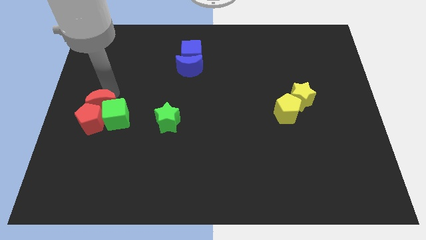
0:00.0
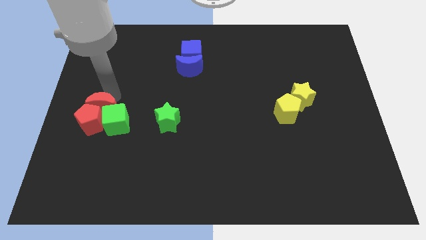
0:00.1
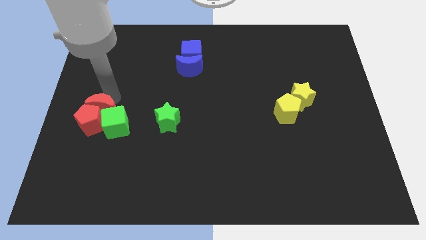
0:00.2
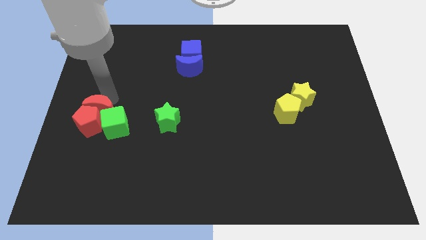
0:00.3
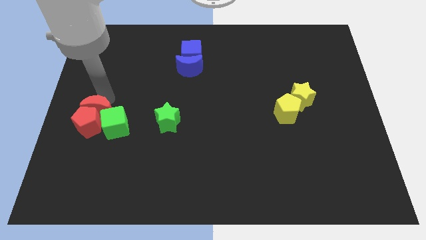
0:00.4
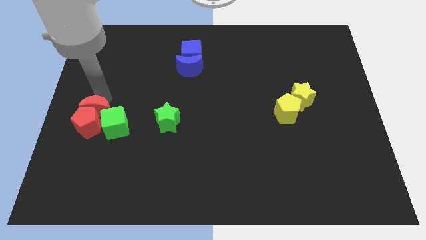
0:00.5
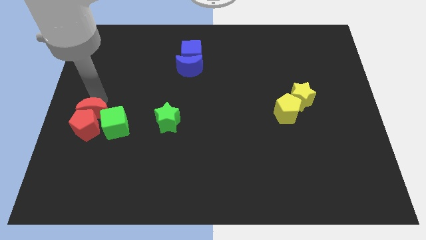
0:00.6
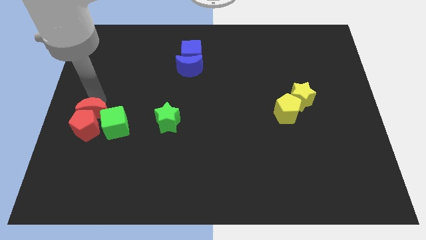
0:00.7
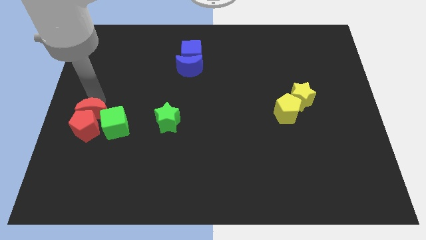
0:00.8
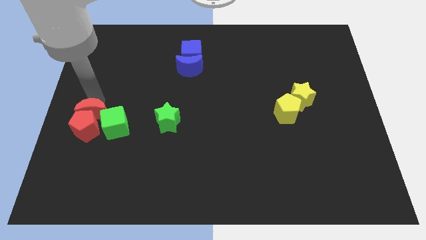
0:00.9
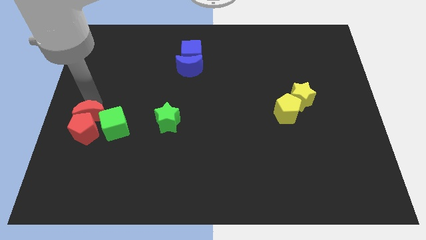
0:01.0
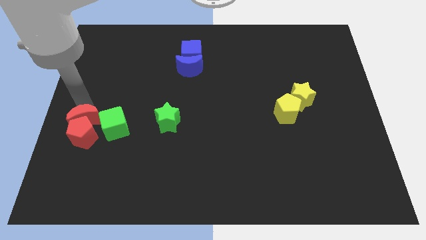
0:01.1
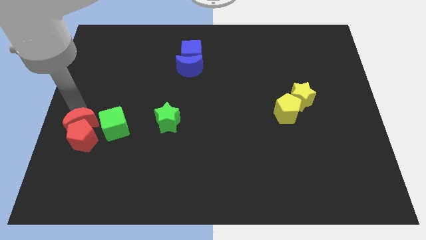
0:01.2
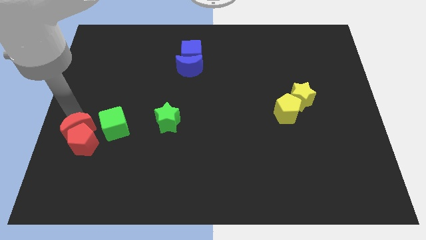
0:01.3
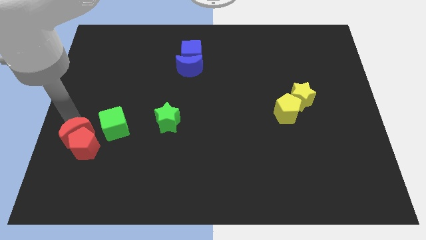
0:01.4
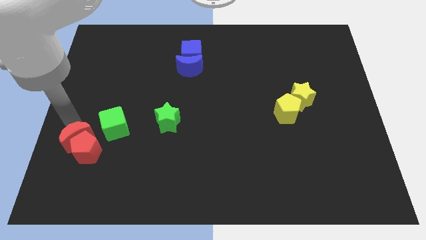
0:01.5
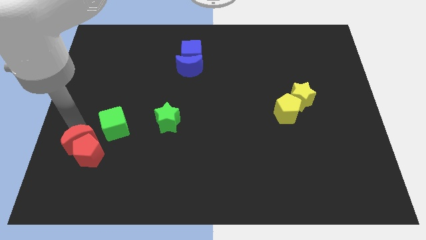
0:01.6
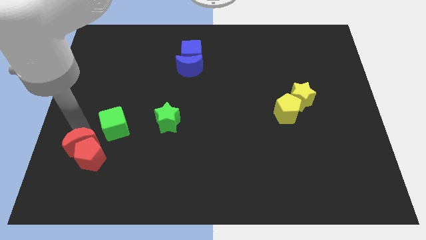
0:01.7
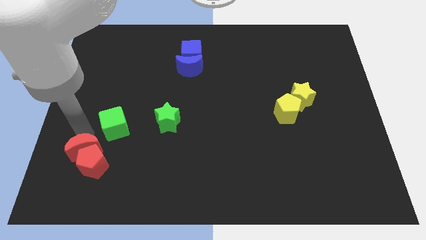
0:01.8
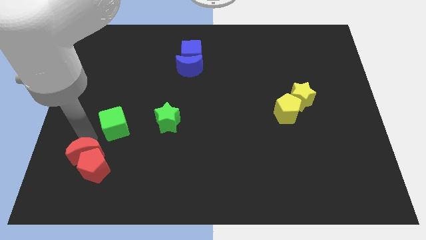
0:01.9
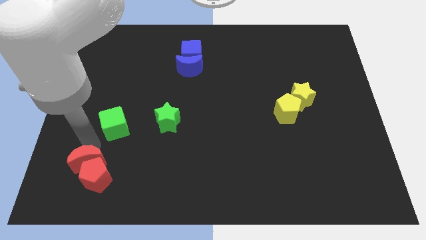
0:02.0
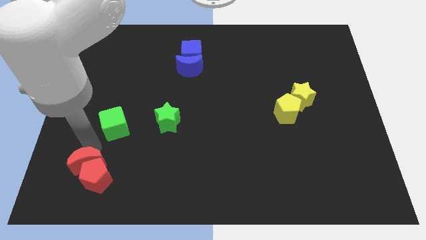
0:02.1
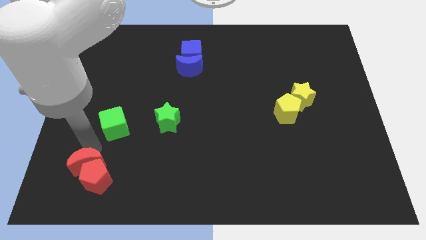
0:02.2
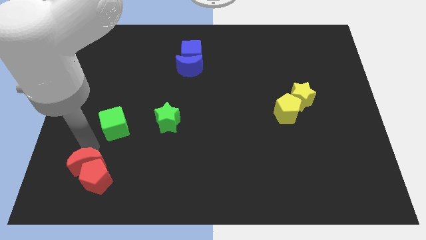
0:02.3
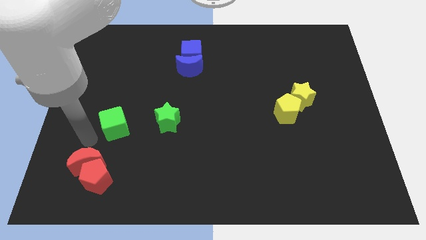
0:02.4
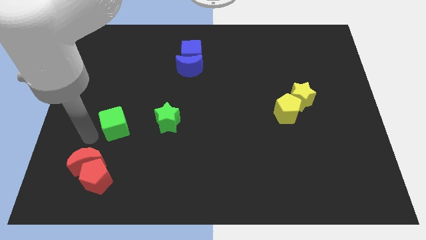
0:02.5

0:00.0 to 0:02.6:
separate red moon and red pentagon from green cube

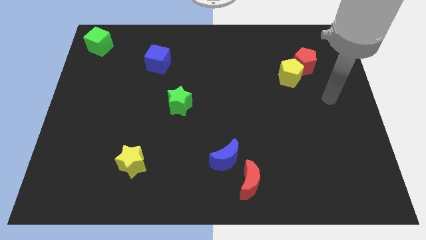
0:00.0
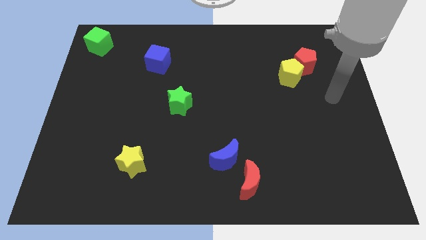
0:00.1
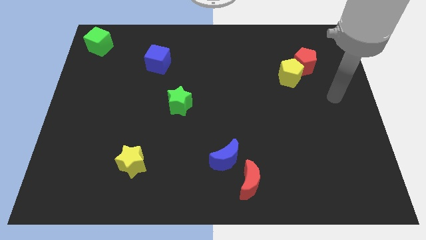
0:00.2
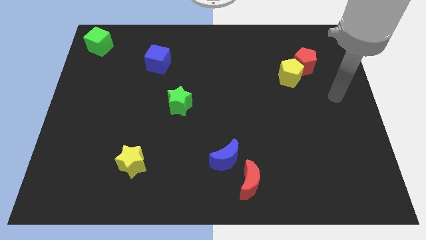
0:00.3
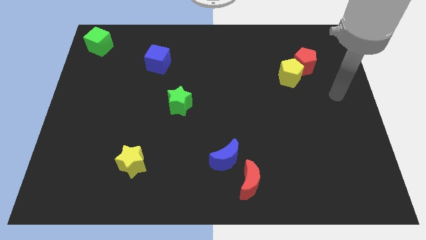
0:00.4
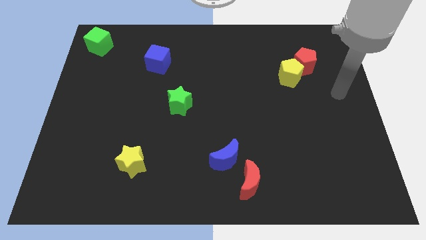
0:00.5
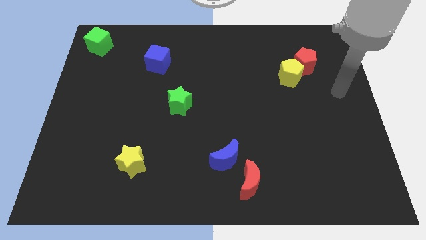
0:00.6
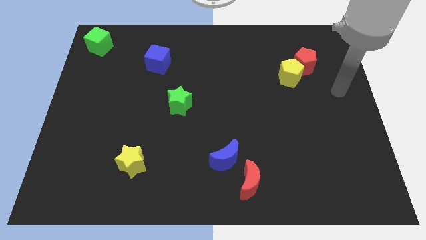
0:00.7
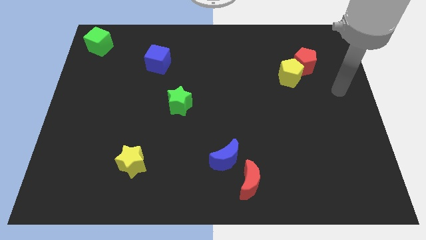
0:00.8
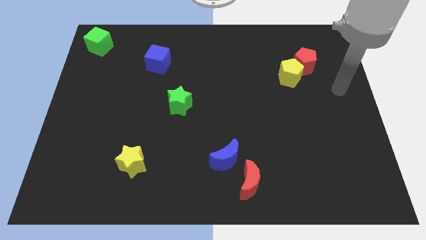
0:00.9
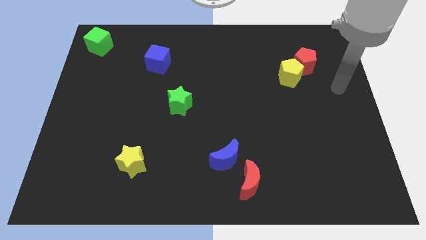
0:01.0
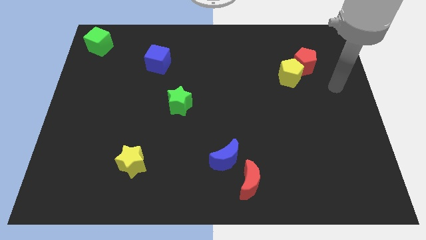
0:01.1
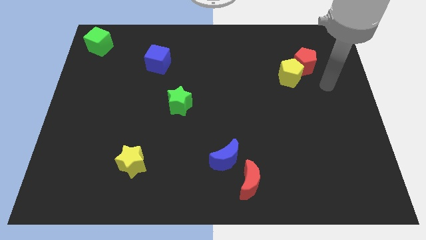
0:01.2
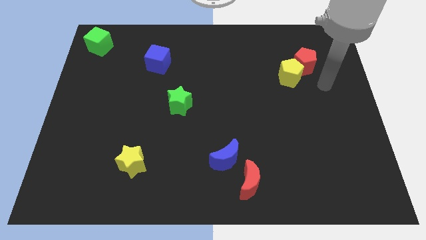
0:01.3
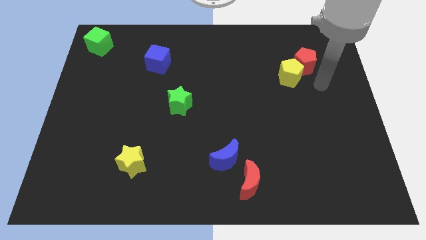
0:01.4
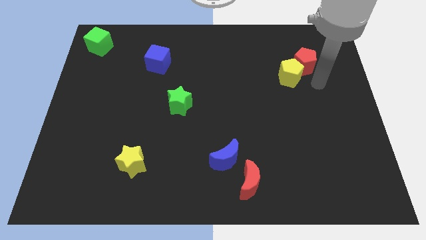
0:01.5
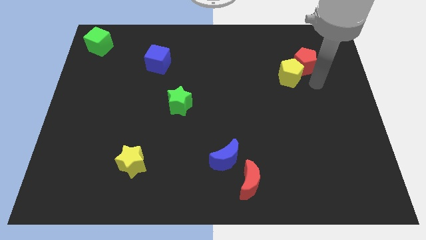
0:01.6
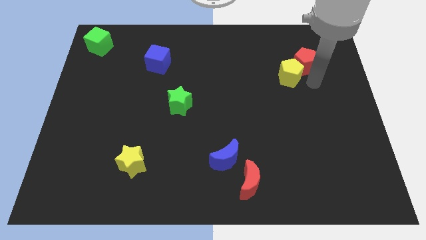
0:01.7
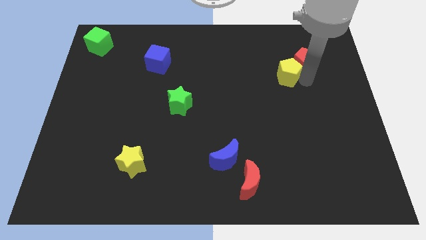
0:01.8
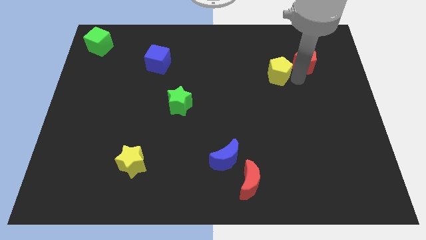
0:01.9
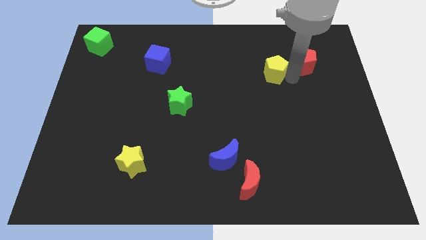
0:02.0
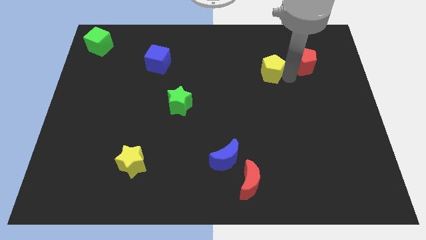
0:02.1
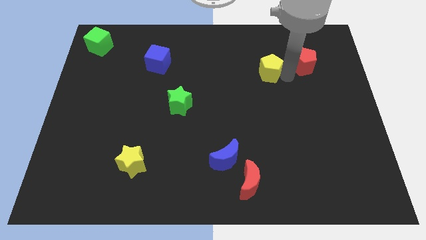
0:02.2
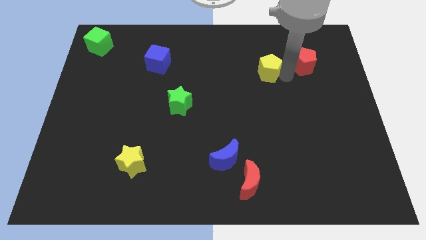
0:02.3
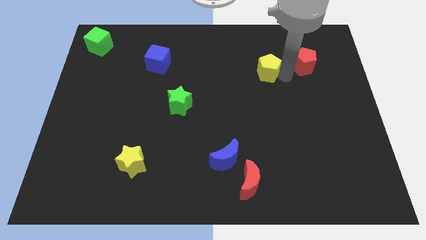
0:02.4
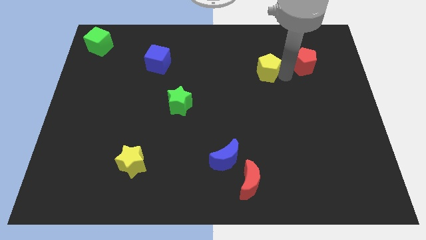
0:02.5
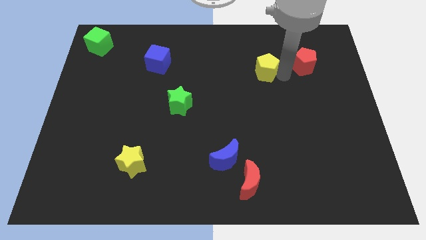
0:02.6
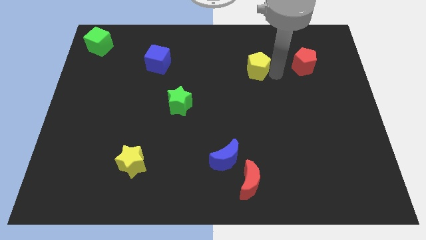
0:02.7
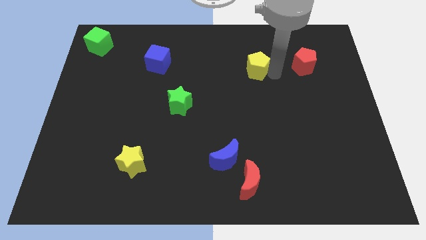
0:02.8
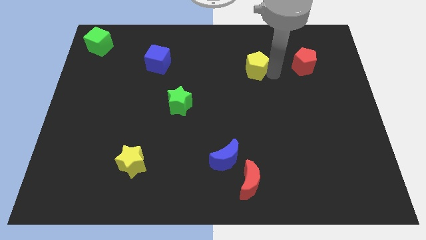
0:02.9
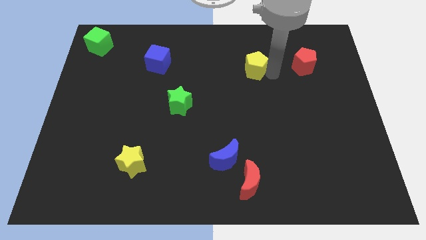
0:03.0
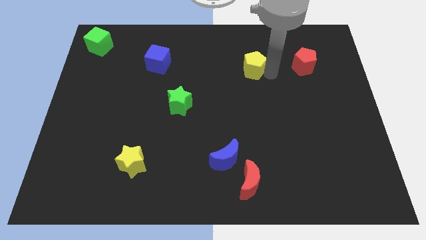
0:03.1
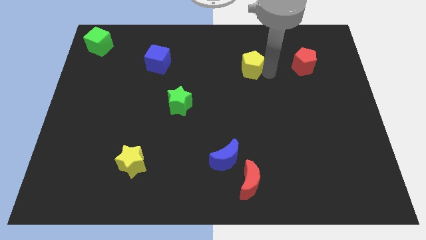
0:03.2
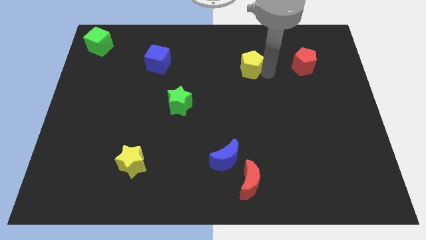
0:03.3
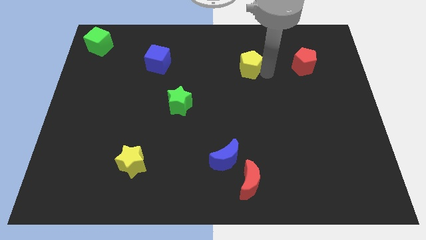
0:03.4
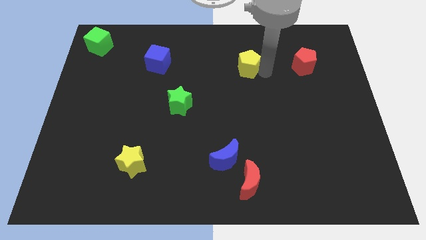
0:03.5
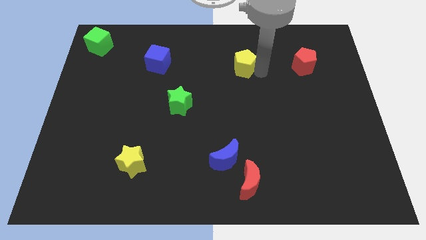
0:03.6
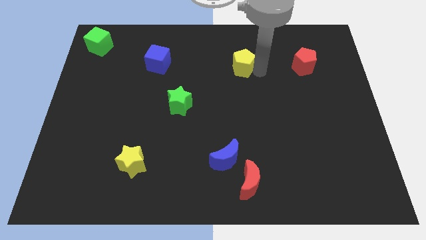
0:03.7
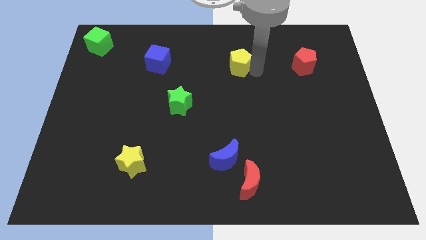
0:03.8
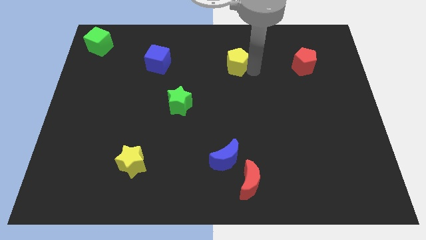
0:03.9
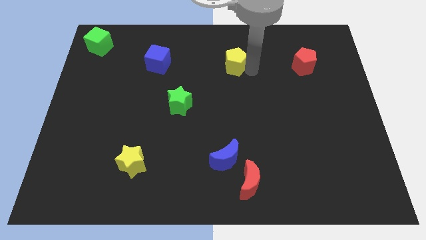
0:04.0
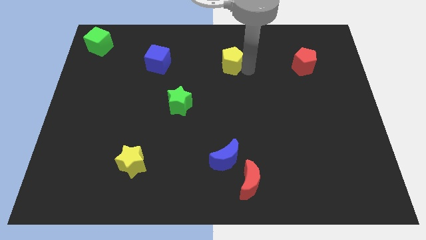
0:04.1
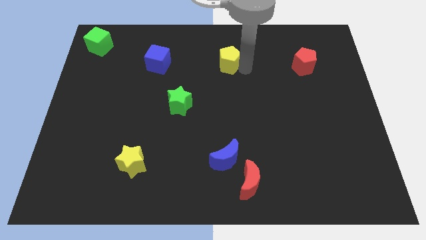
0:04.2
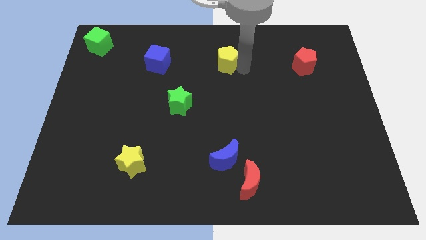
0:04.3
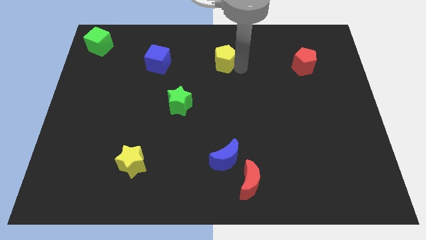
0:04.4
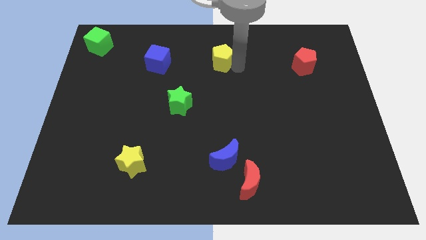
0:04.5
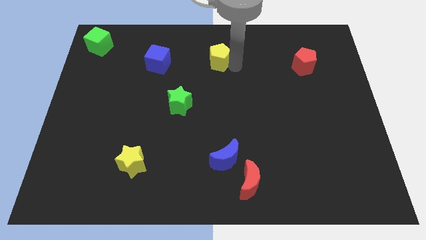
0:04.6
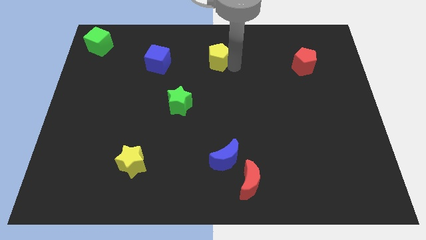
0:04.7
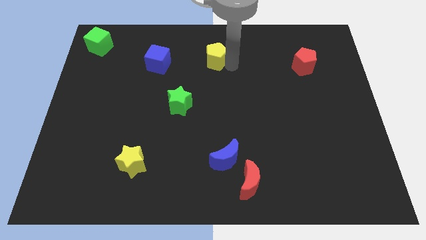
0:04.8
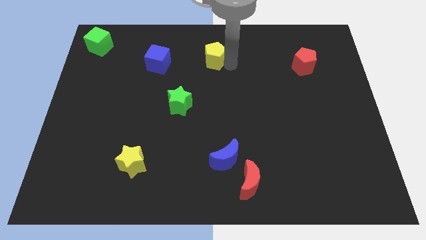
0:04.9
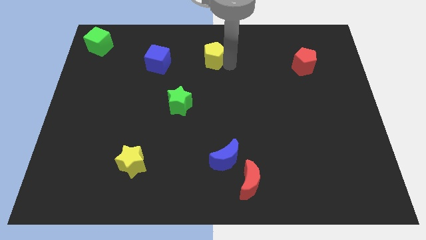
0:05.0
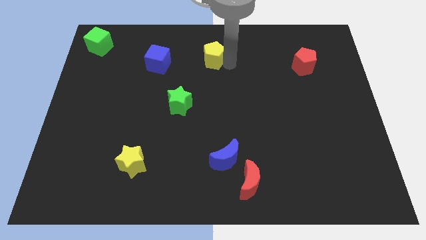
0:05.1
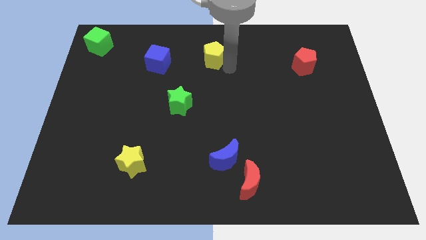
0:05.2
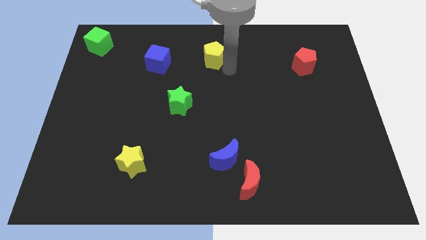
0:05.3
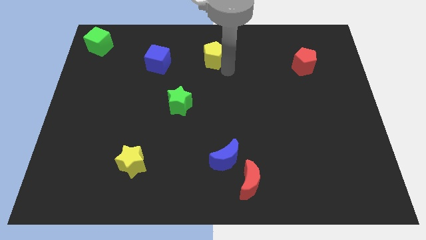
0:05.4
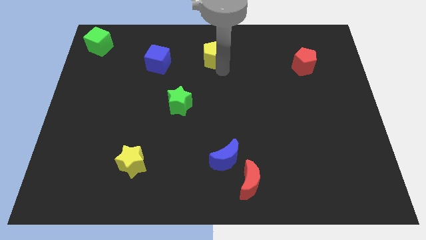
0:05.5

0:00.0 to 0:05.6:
separate the yellow pentagon from the red pentagon

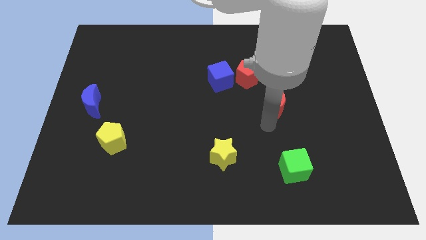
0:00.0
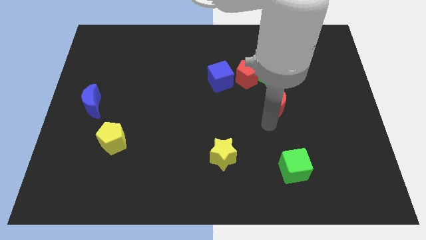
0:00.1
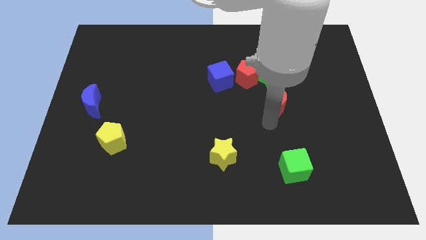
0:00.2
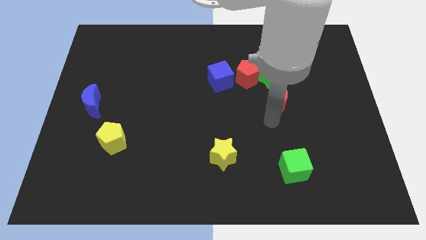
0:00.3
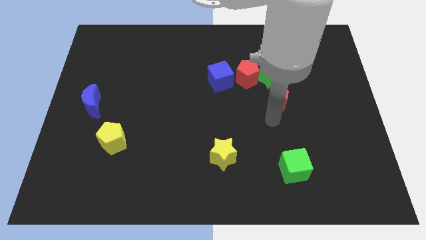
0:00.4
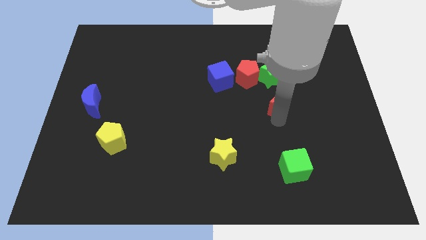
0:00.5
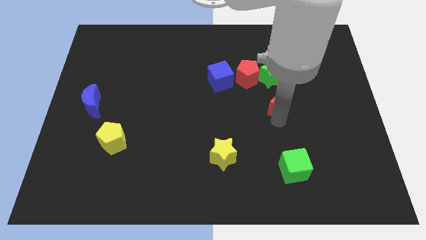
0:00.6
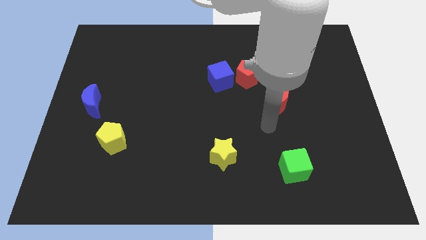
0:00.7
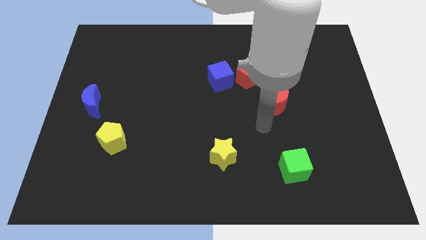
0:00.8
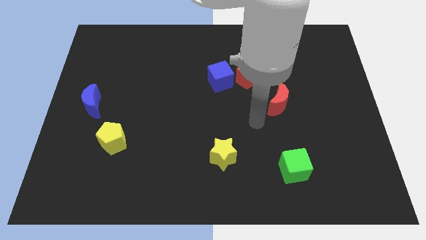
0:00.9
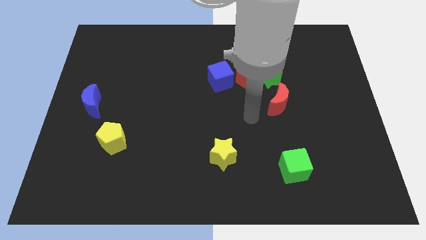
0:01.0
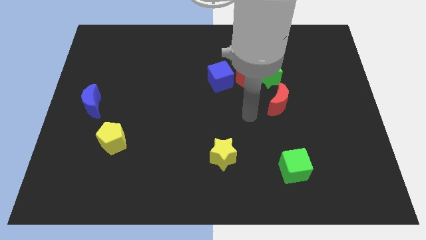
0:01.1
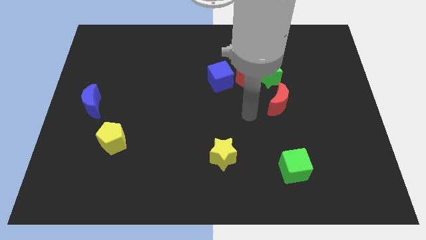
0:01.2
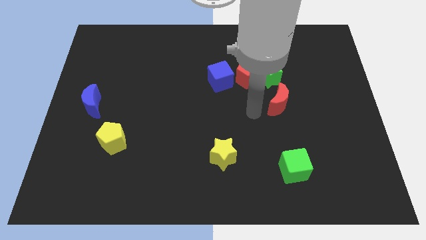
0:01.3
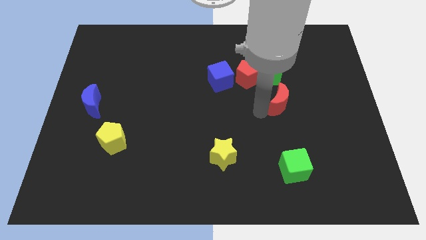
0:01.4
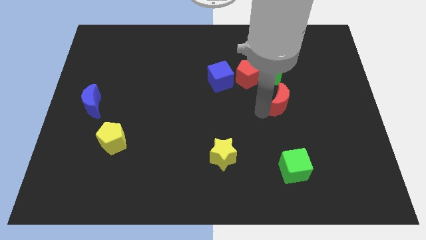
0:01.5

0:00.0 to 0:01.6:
push the red crescent below the green star
